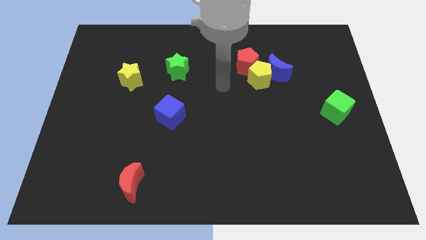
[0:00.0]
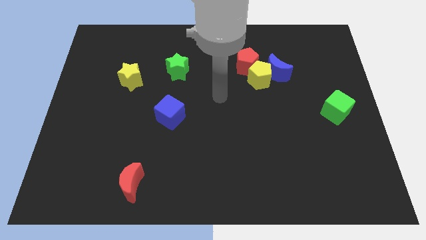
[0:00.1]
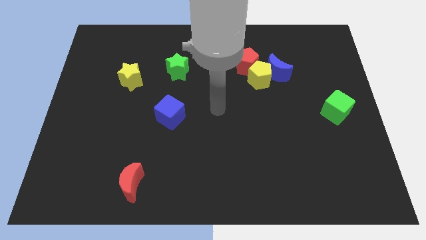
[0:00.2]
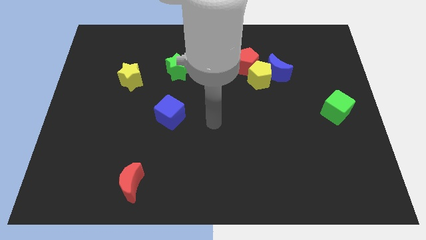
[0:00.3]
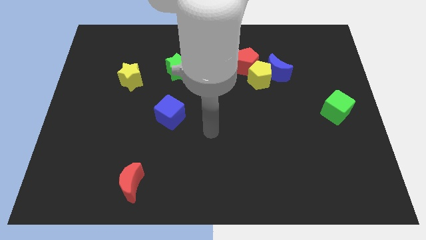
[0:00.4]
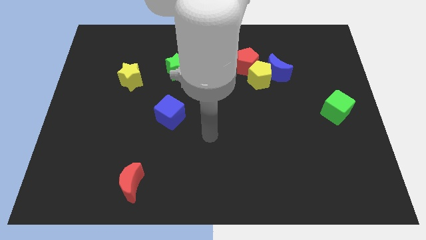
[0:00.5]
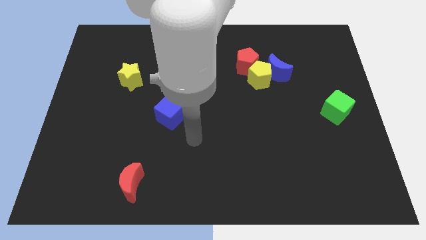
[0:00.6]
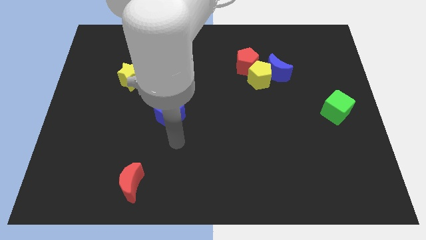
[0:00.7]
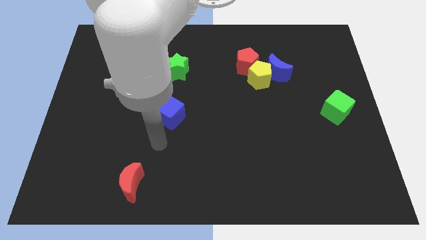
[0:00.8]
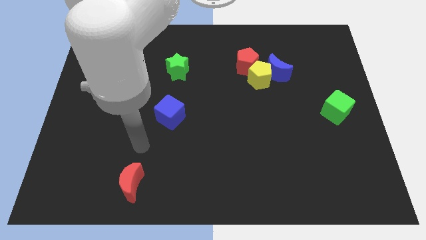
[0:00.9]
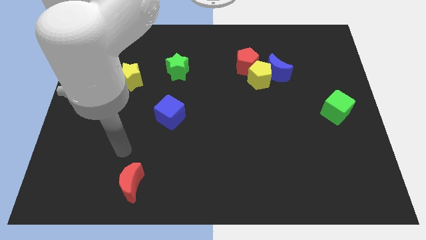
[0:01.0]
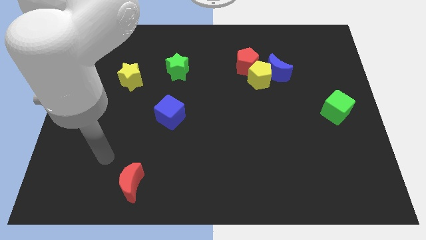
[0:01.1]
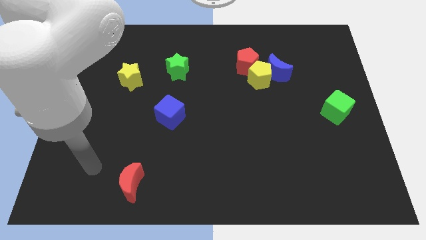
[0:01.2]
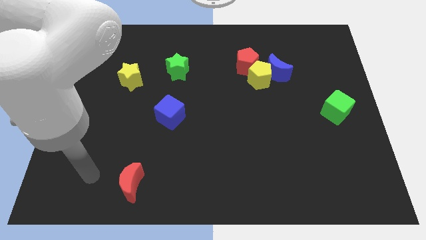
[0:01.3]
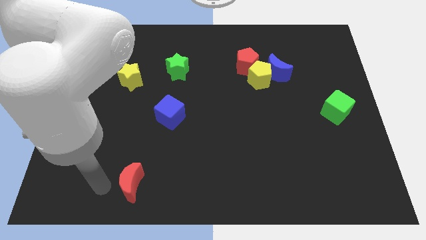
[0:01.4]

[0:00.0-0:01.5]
place your hand at the left side of the red moon

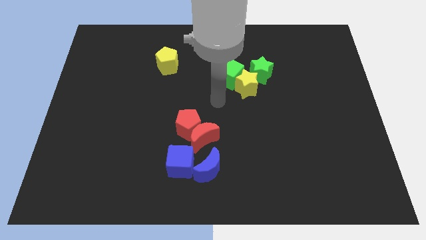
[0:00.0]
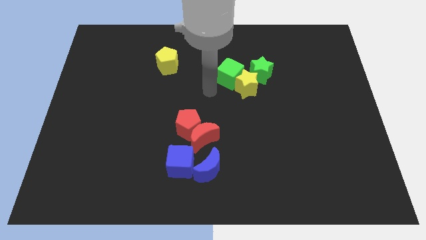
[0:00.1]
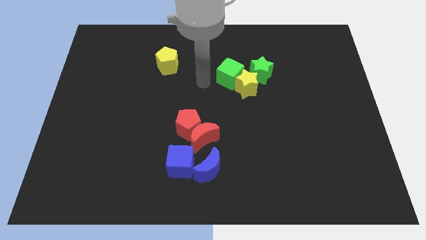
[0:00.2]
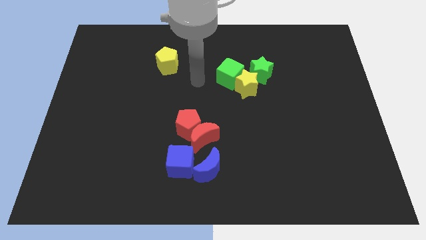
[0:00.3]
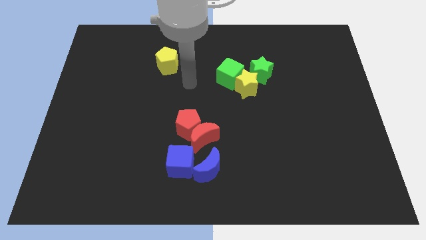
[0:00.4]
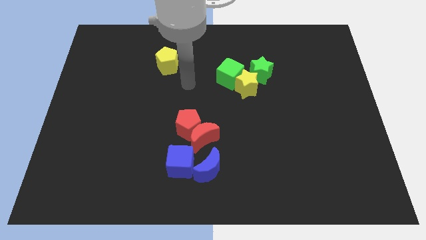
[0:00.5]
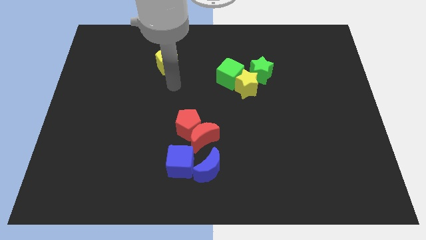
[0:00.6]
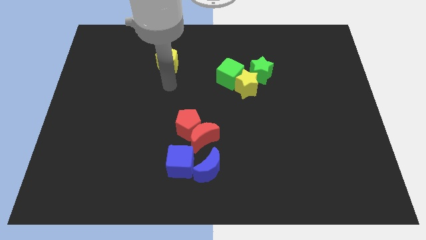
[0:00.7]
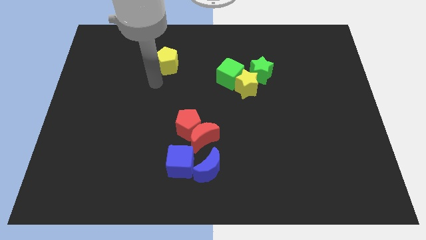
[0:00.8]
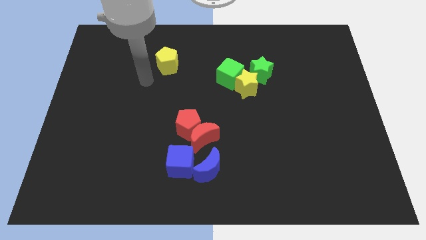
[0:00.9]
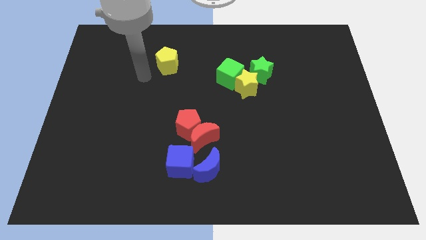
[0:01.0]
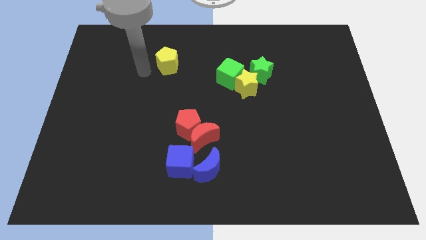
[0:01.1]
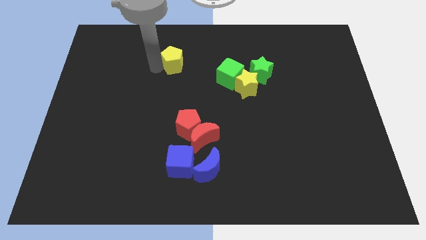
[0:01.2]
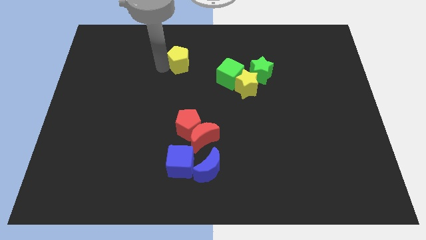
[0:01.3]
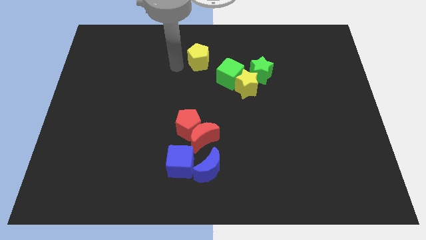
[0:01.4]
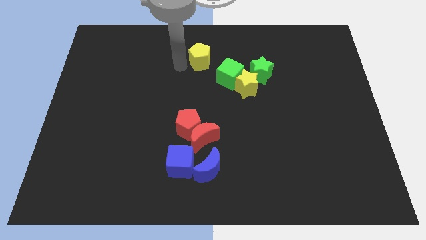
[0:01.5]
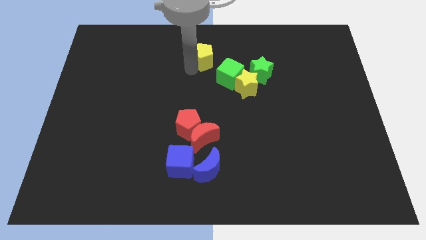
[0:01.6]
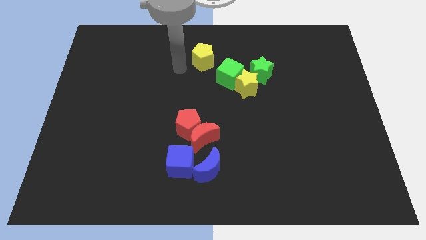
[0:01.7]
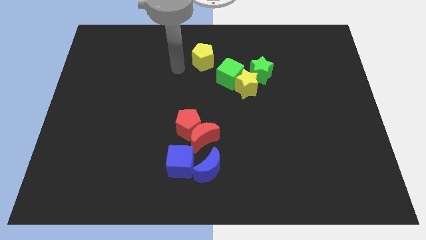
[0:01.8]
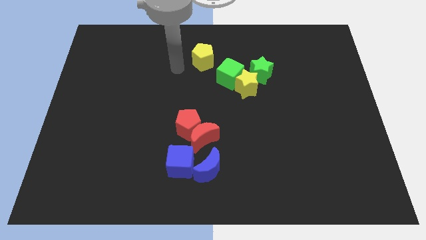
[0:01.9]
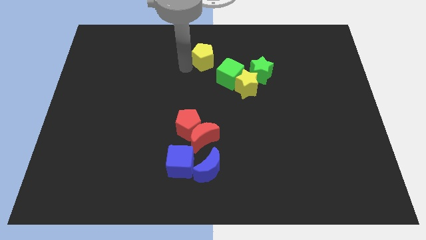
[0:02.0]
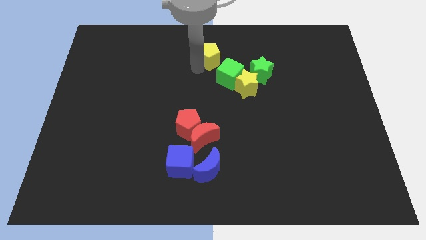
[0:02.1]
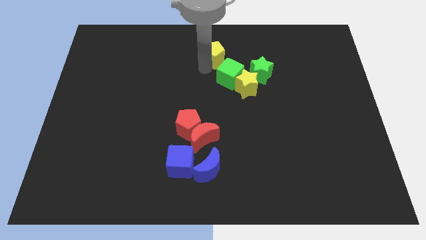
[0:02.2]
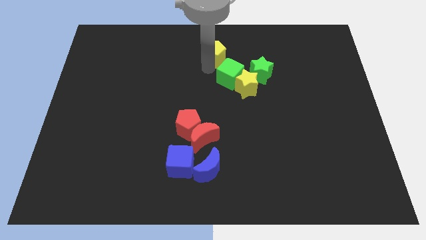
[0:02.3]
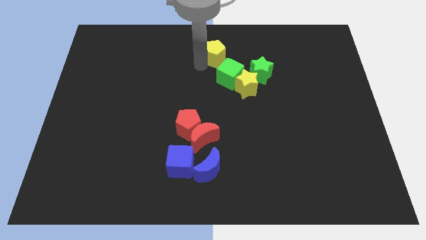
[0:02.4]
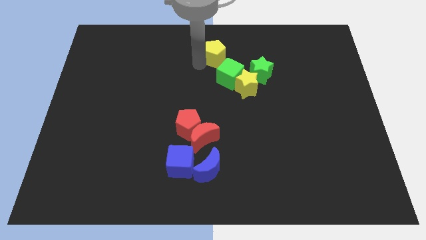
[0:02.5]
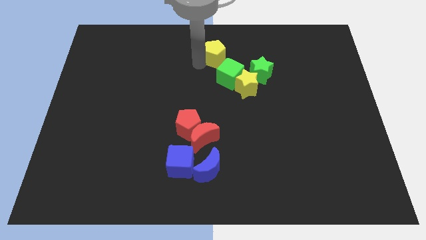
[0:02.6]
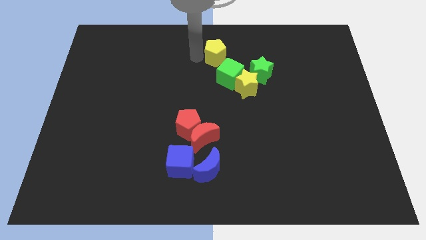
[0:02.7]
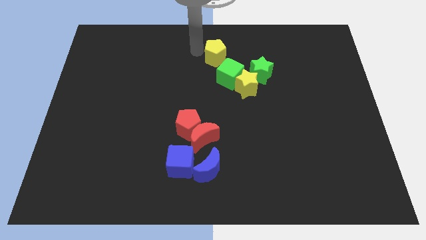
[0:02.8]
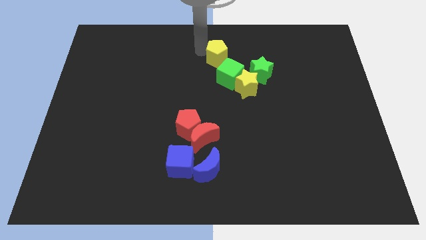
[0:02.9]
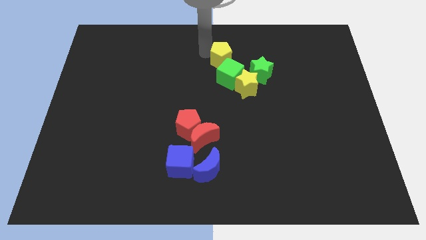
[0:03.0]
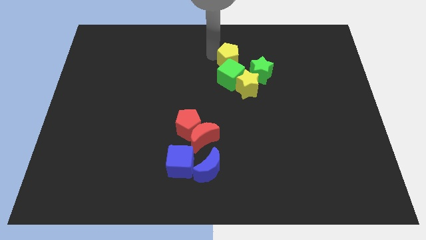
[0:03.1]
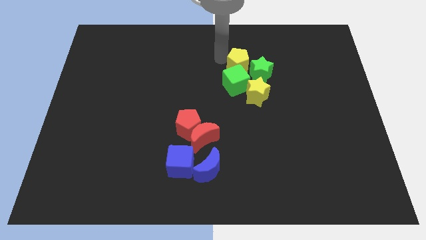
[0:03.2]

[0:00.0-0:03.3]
place the yellow pentagon above the green cube

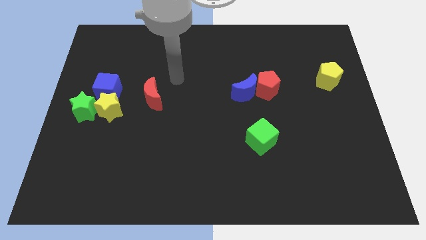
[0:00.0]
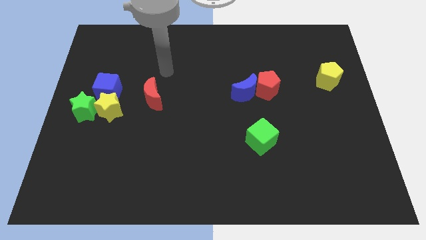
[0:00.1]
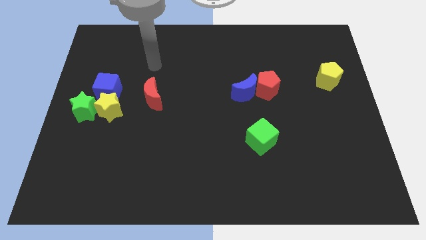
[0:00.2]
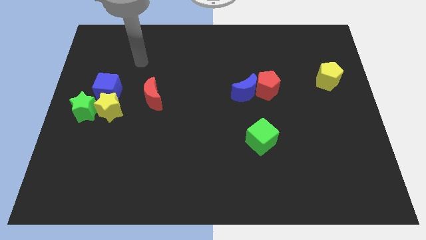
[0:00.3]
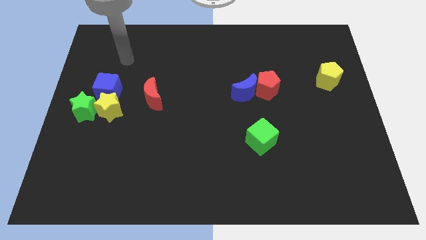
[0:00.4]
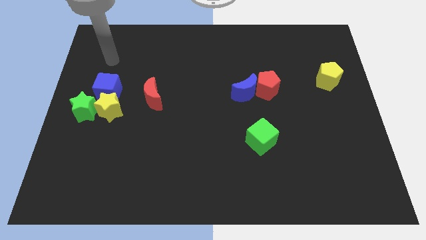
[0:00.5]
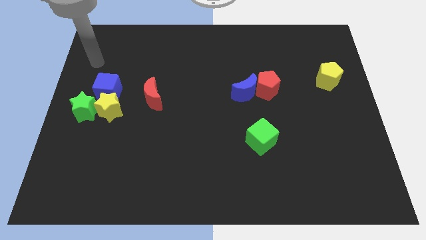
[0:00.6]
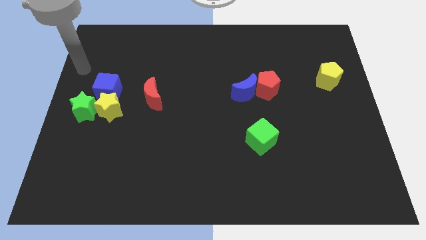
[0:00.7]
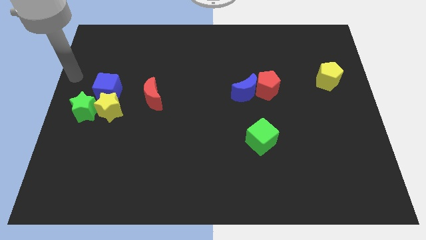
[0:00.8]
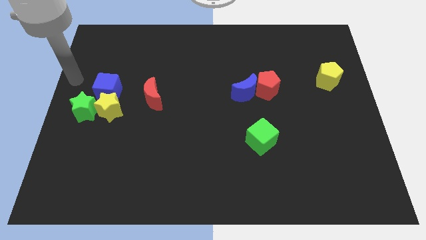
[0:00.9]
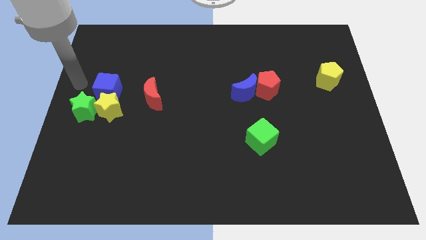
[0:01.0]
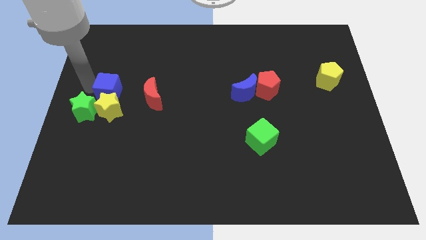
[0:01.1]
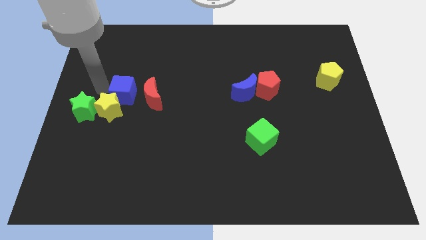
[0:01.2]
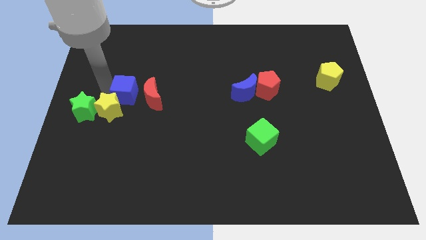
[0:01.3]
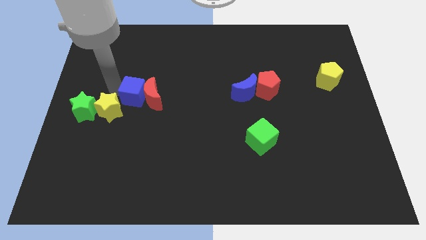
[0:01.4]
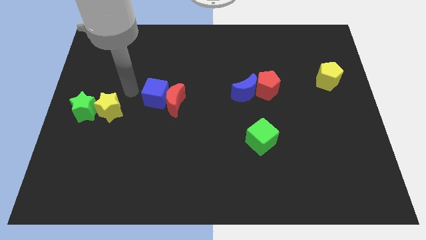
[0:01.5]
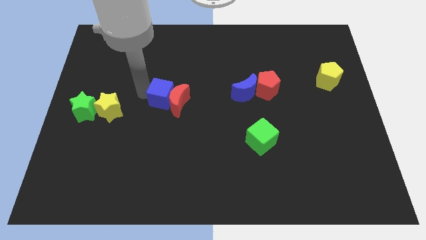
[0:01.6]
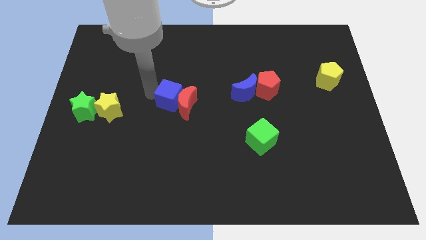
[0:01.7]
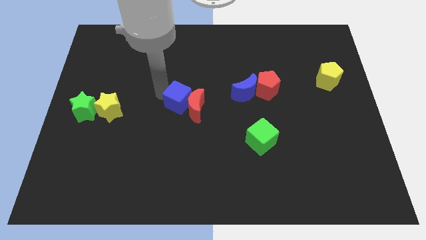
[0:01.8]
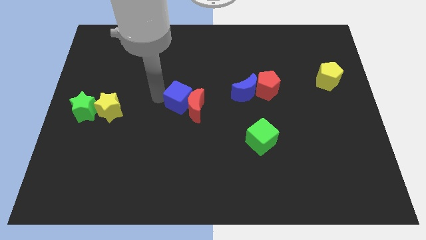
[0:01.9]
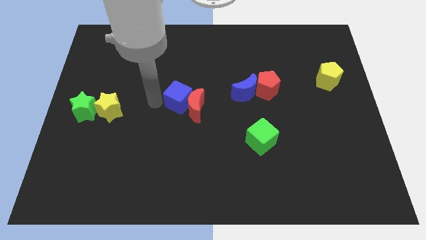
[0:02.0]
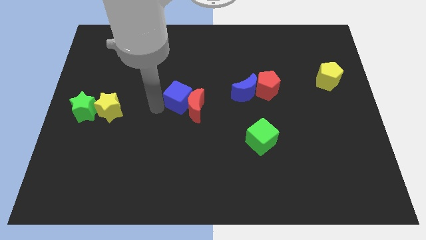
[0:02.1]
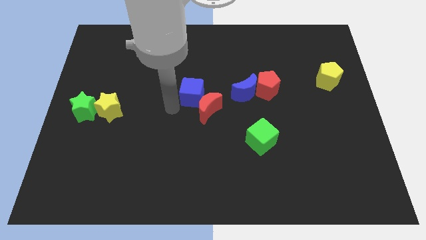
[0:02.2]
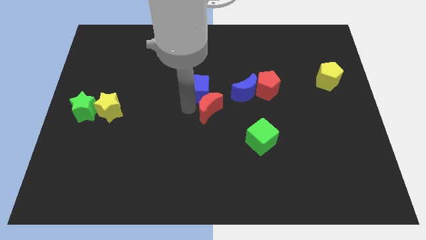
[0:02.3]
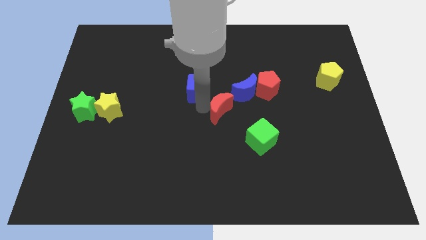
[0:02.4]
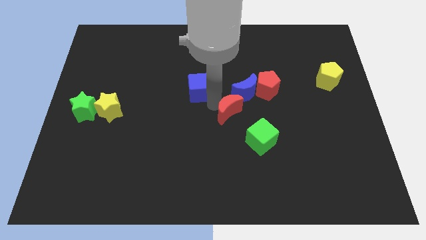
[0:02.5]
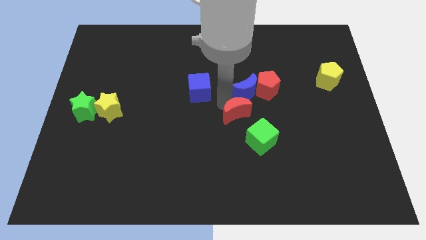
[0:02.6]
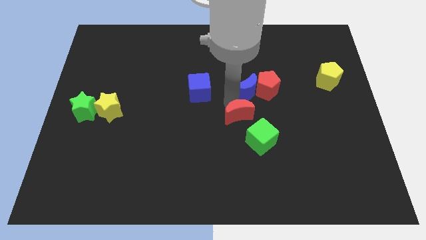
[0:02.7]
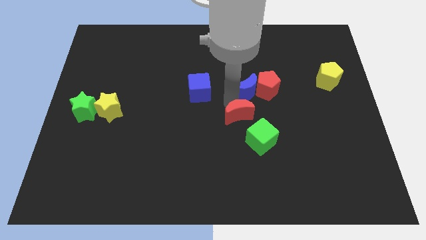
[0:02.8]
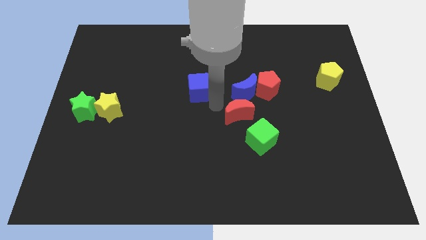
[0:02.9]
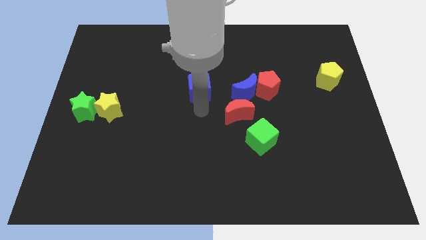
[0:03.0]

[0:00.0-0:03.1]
place the blue cube and red crescent diagonal to the top left of the green cube

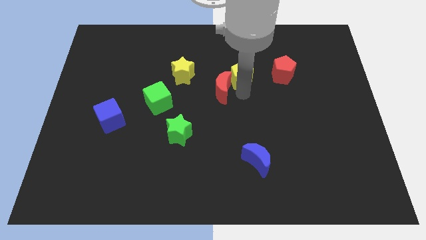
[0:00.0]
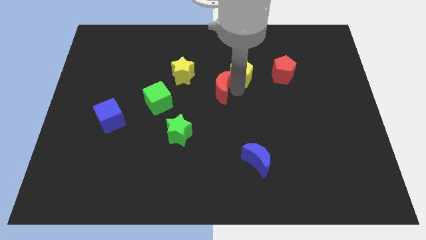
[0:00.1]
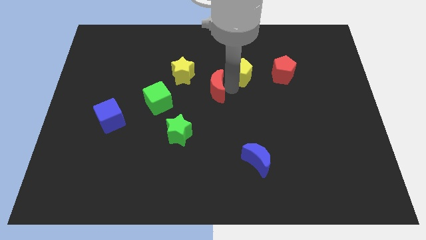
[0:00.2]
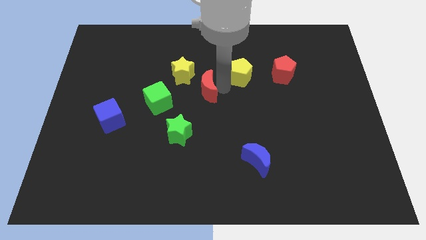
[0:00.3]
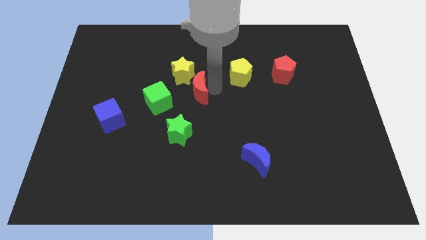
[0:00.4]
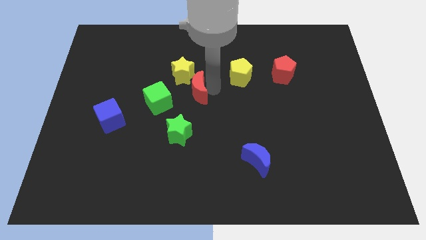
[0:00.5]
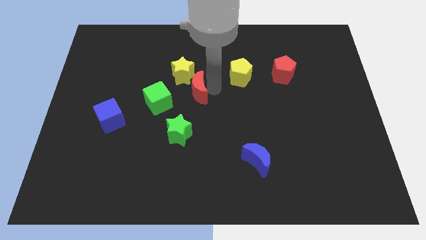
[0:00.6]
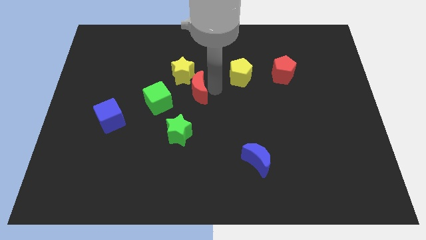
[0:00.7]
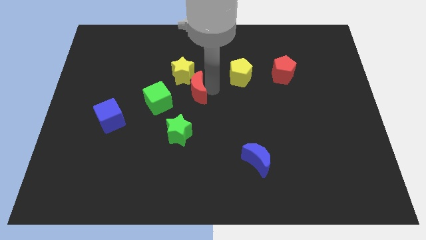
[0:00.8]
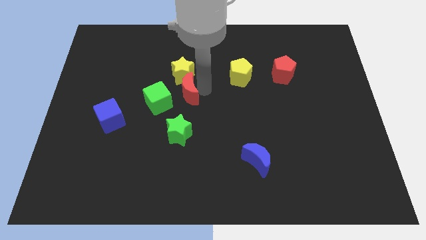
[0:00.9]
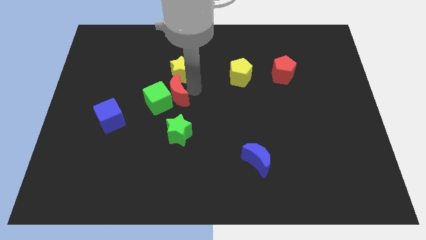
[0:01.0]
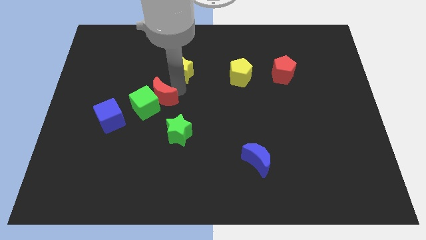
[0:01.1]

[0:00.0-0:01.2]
push the red crescent slightly to the left
